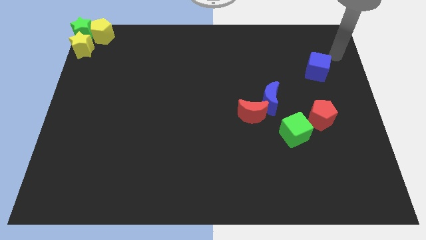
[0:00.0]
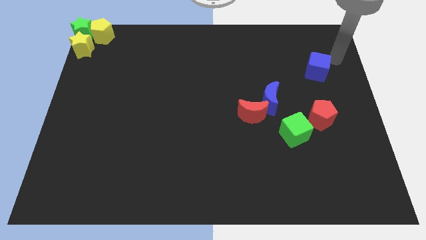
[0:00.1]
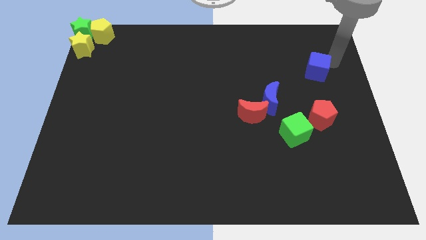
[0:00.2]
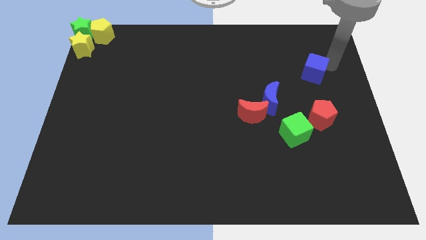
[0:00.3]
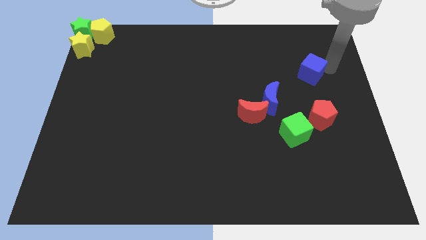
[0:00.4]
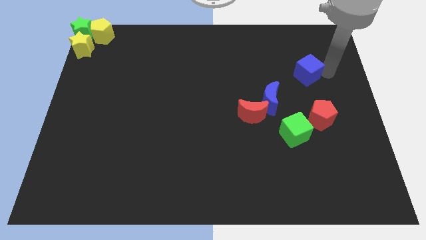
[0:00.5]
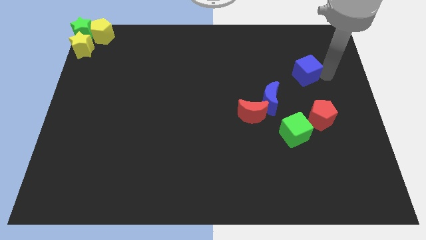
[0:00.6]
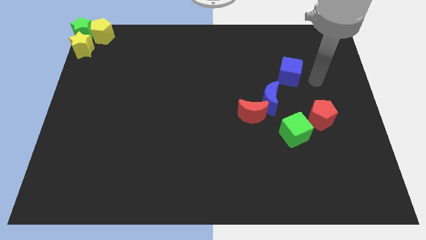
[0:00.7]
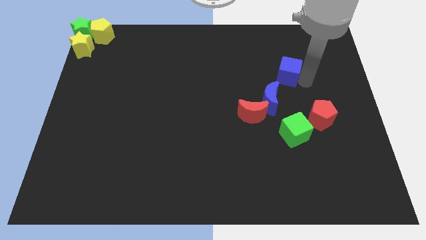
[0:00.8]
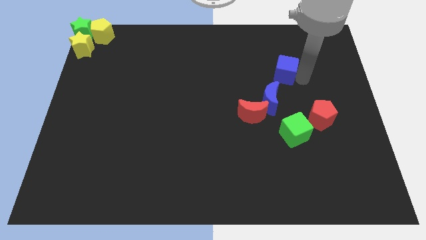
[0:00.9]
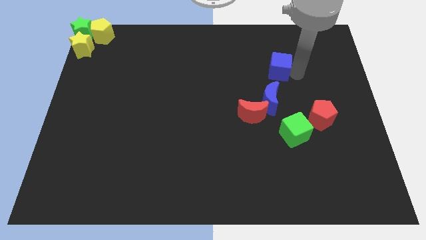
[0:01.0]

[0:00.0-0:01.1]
place blue cube on top right of blue moon

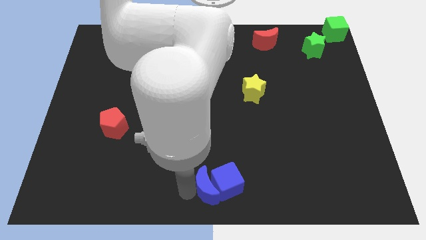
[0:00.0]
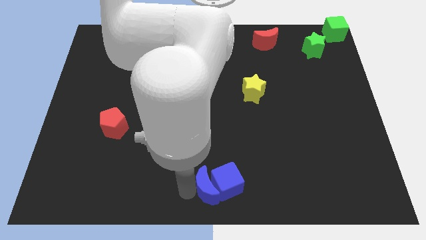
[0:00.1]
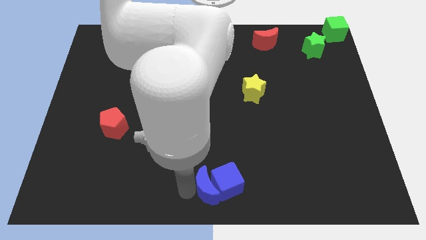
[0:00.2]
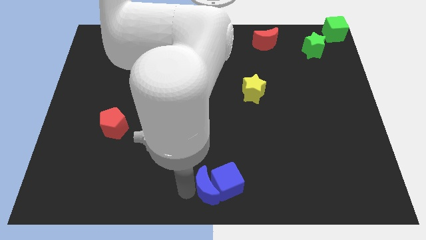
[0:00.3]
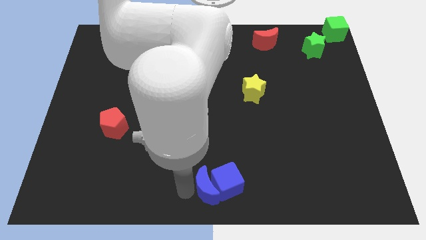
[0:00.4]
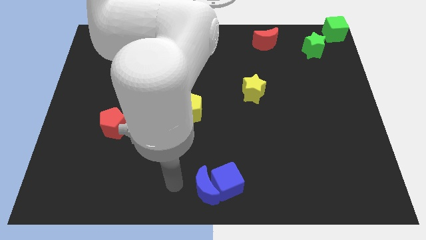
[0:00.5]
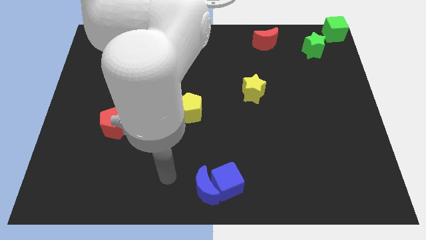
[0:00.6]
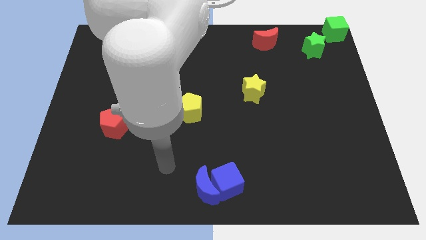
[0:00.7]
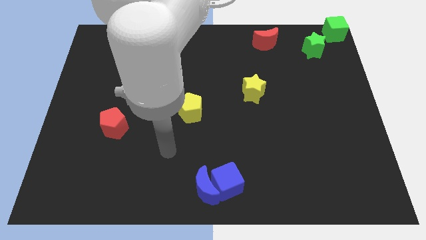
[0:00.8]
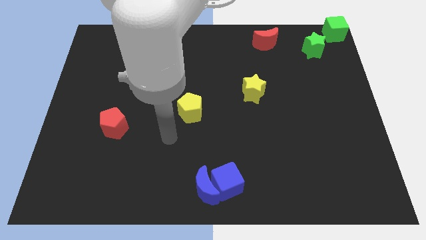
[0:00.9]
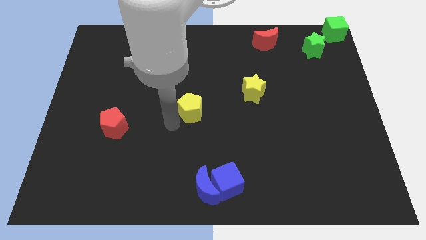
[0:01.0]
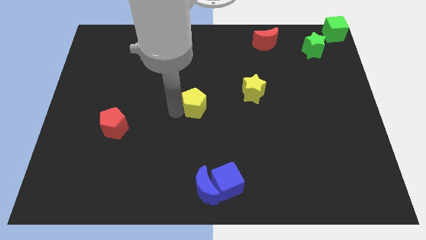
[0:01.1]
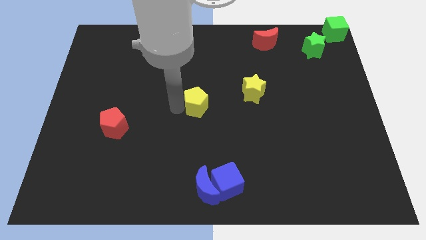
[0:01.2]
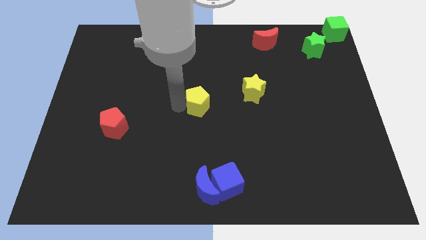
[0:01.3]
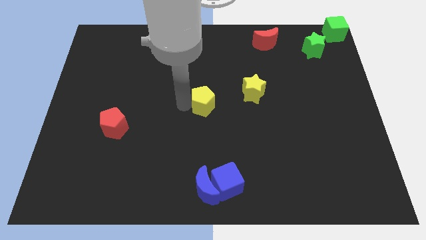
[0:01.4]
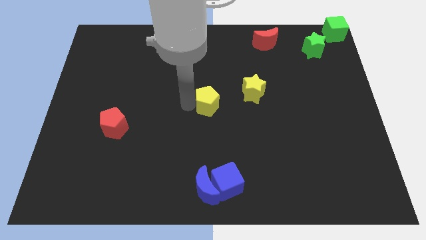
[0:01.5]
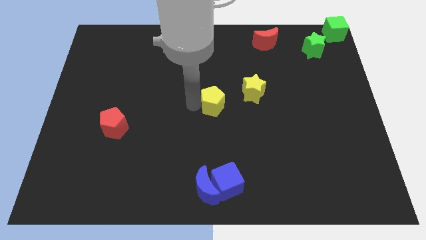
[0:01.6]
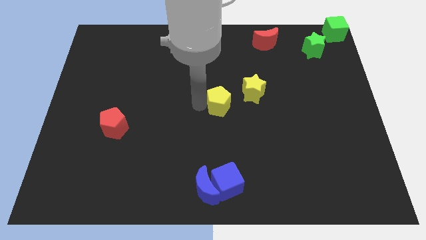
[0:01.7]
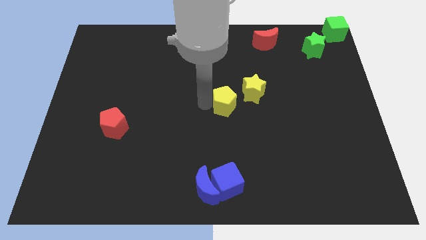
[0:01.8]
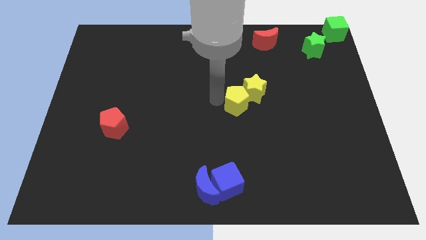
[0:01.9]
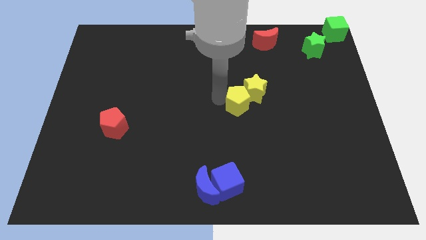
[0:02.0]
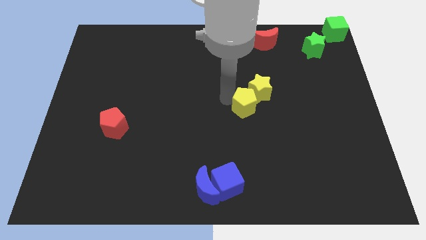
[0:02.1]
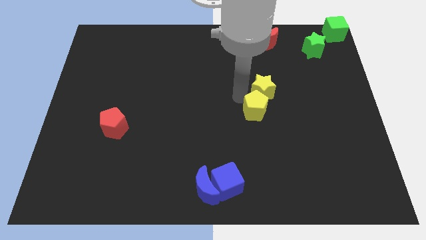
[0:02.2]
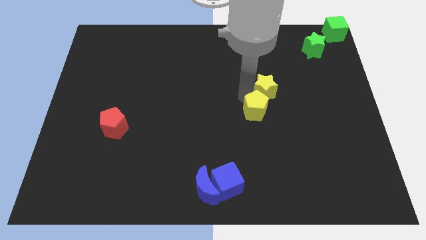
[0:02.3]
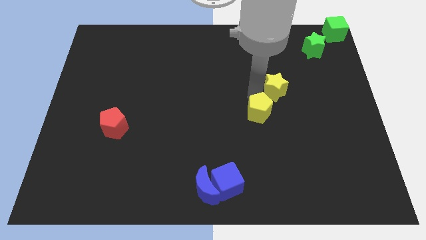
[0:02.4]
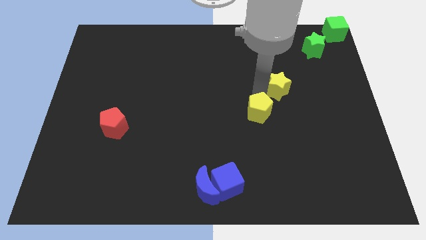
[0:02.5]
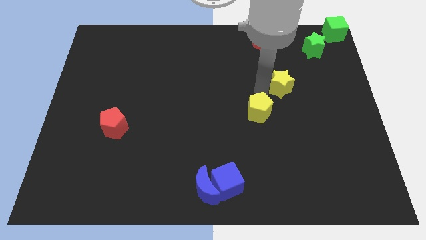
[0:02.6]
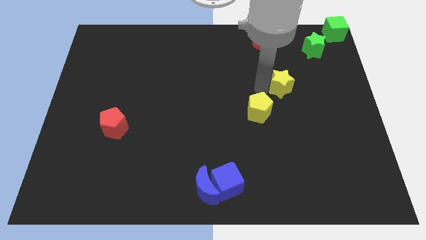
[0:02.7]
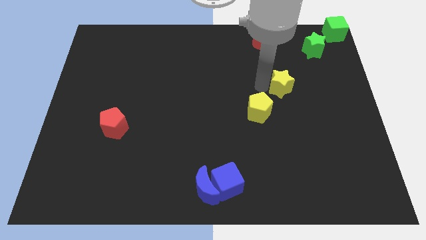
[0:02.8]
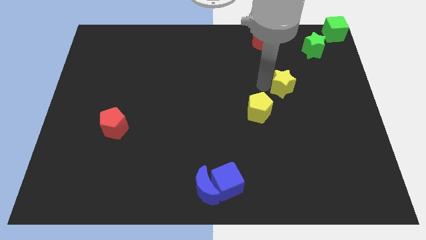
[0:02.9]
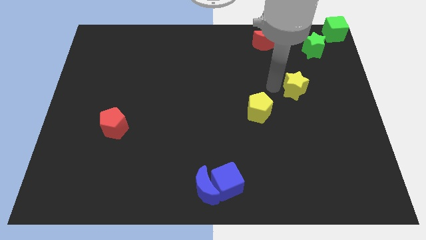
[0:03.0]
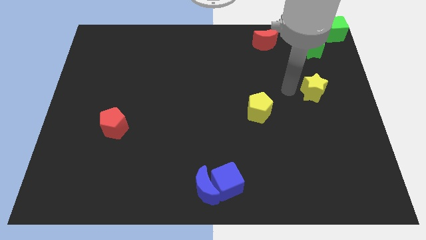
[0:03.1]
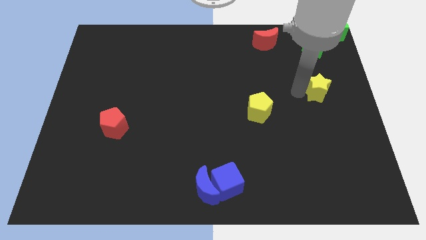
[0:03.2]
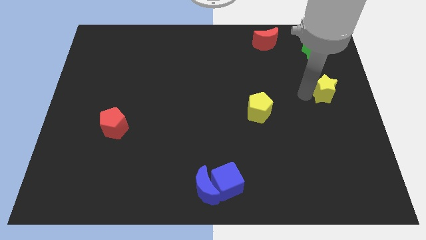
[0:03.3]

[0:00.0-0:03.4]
move yellow blocks towards diagonally upside of the board

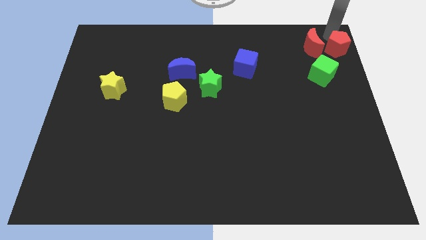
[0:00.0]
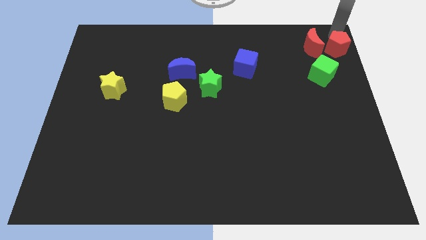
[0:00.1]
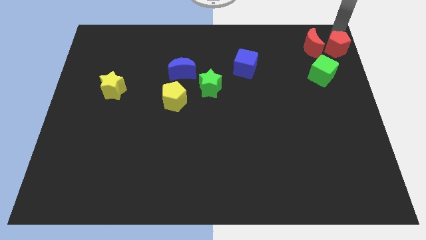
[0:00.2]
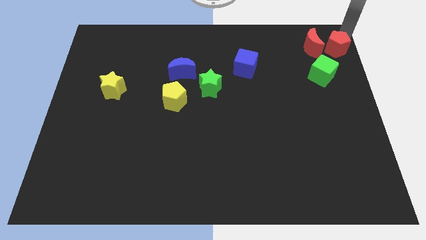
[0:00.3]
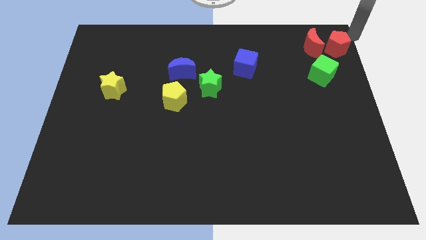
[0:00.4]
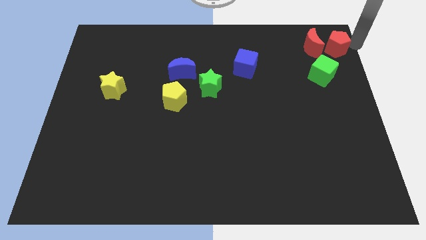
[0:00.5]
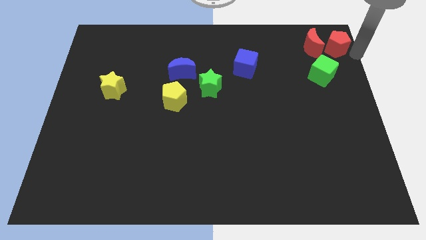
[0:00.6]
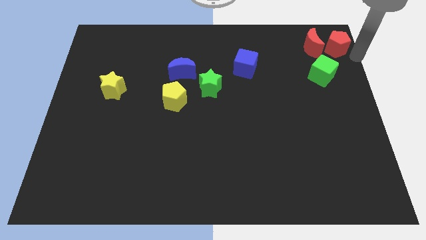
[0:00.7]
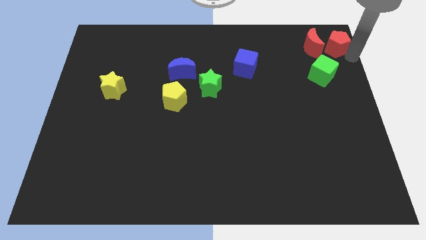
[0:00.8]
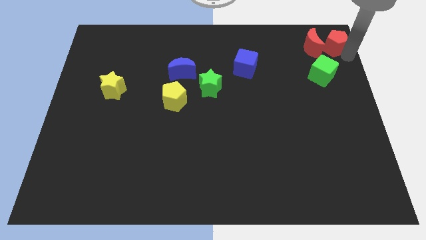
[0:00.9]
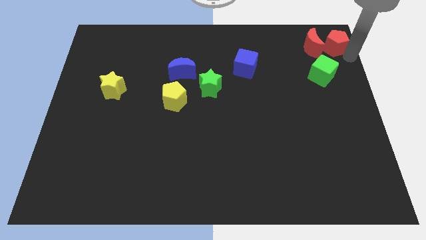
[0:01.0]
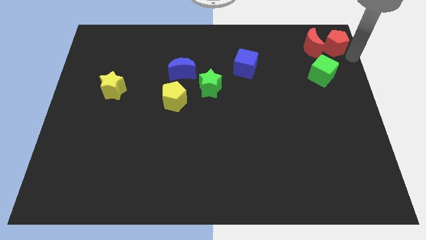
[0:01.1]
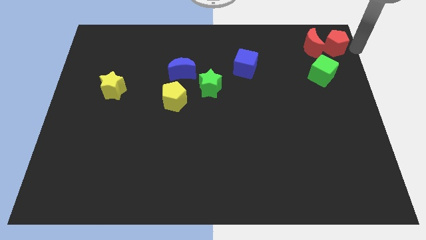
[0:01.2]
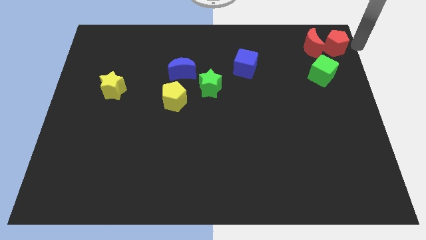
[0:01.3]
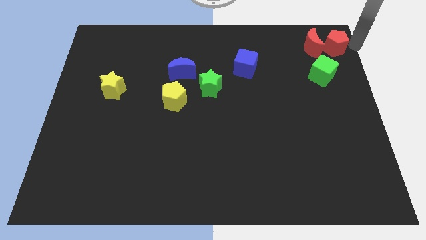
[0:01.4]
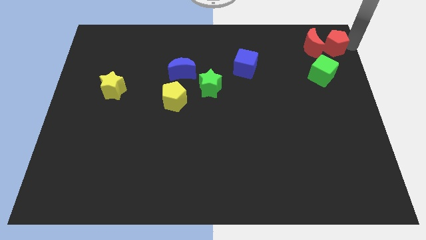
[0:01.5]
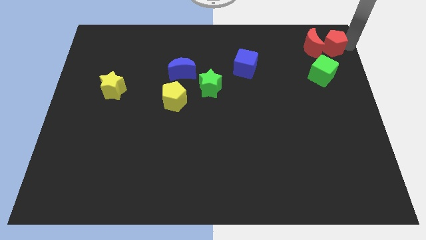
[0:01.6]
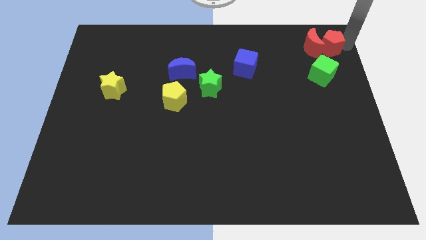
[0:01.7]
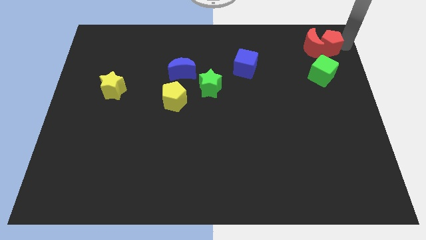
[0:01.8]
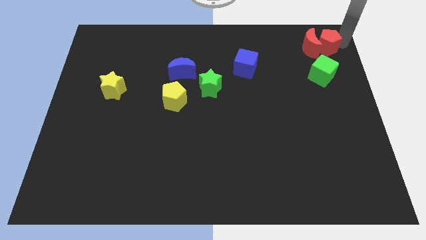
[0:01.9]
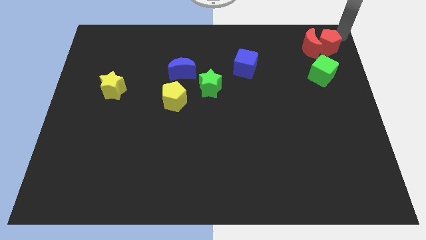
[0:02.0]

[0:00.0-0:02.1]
push red pentagon into red moon

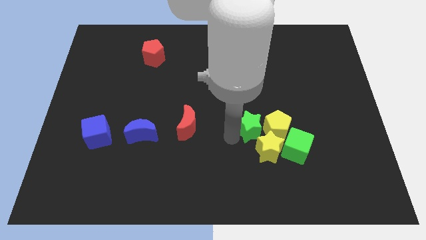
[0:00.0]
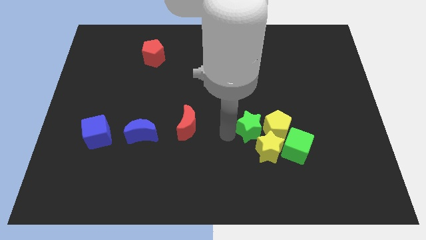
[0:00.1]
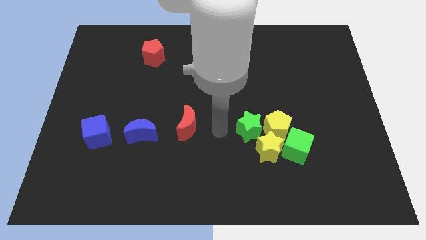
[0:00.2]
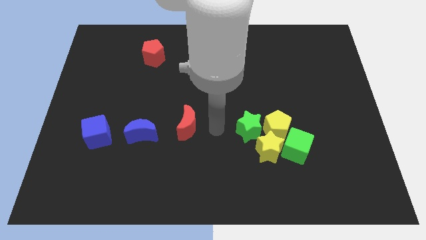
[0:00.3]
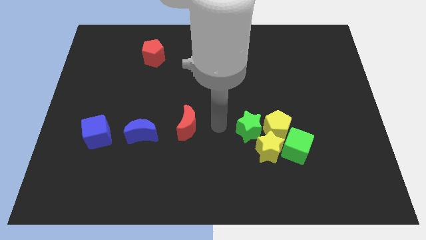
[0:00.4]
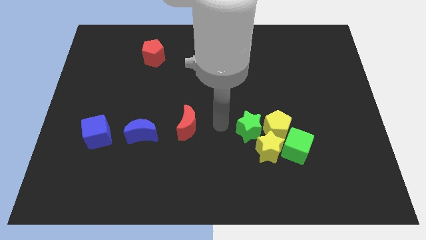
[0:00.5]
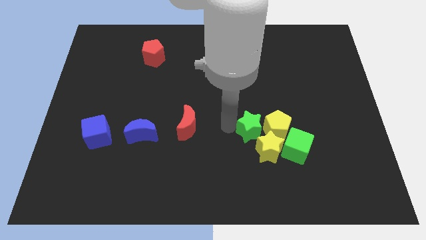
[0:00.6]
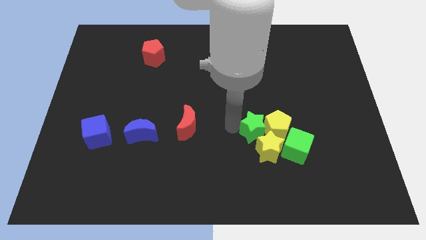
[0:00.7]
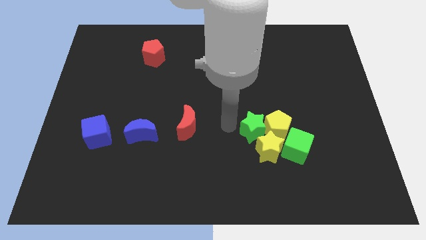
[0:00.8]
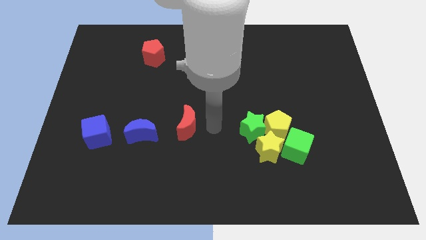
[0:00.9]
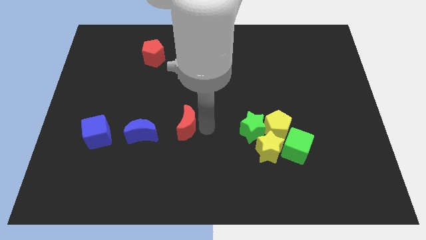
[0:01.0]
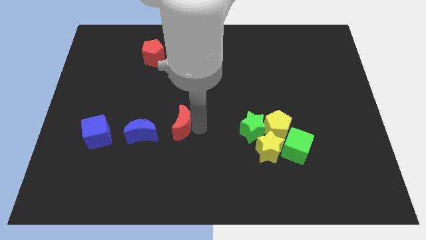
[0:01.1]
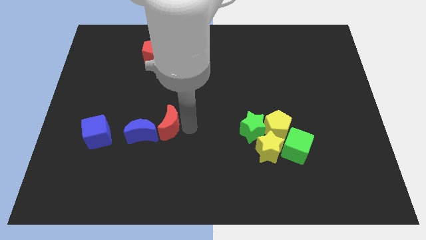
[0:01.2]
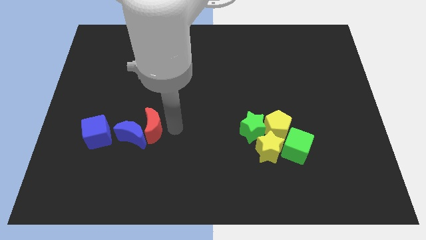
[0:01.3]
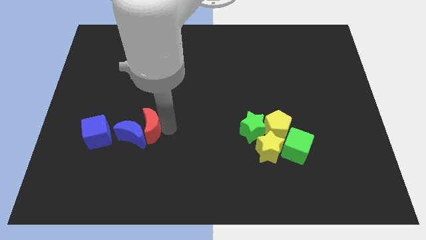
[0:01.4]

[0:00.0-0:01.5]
push the red crescent into the blue crescent

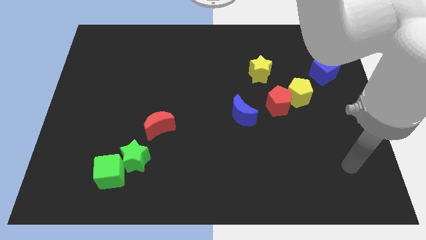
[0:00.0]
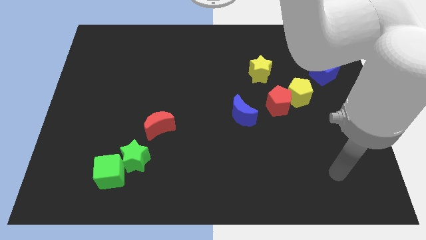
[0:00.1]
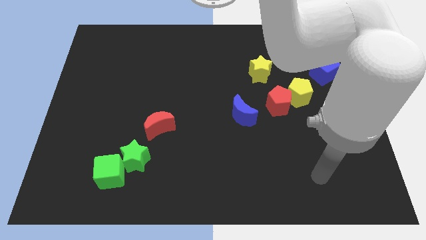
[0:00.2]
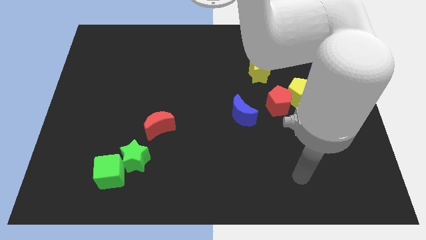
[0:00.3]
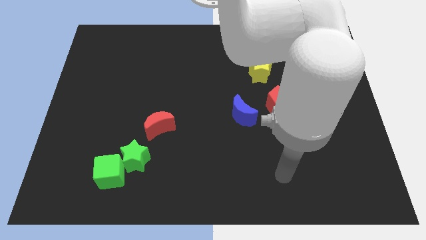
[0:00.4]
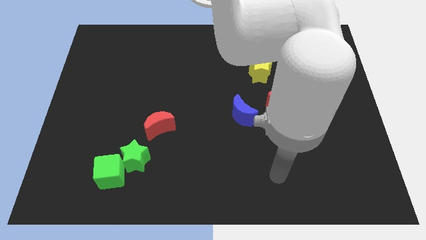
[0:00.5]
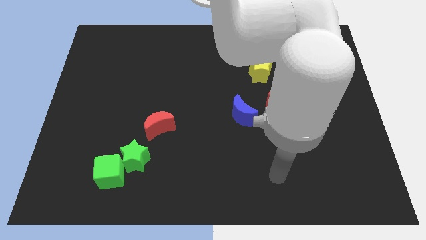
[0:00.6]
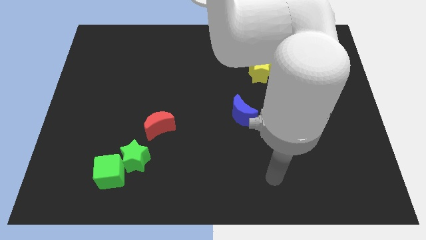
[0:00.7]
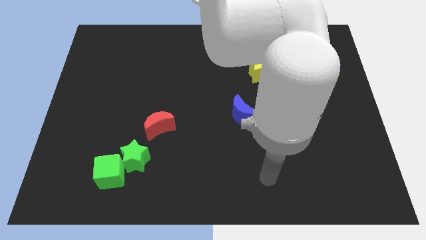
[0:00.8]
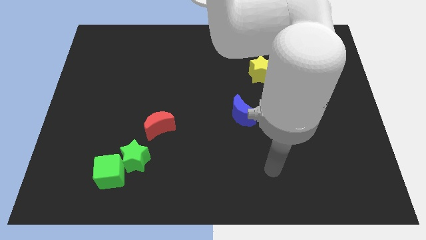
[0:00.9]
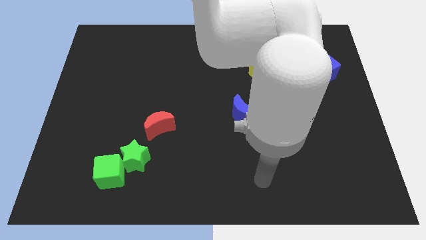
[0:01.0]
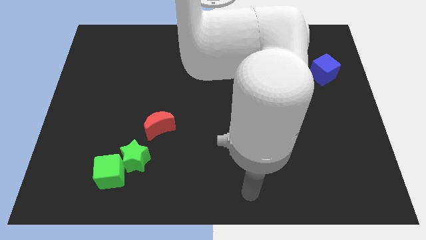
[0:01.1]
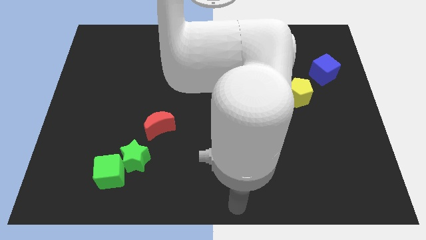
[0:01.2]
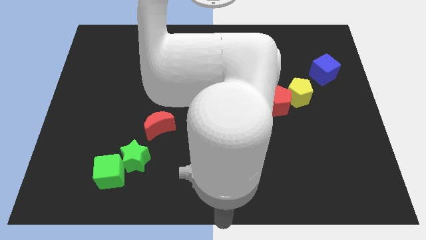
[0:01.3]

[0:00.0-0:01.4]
move your arm to the bottom center of the board
